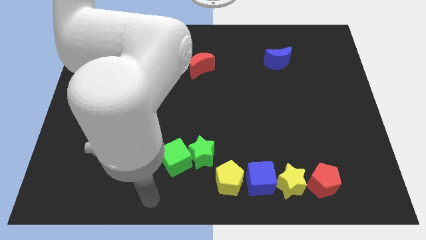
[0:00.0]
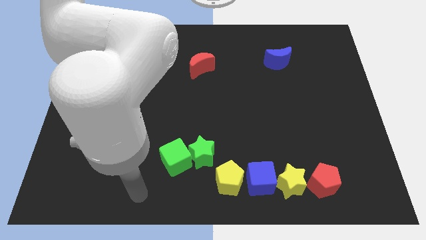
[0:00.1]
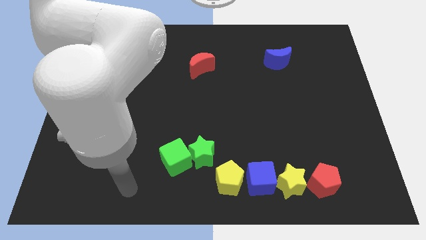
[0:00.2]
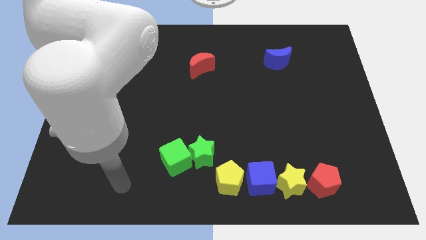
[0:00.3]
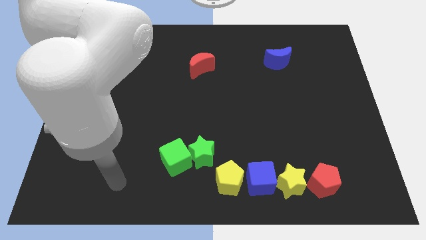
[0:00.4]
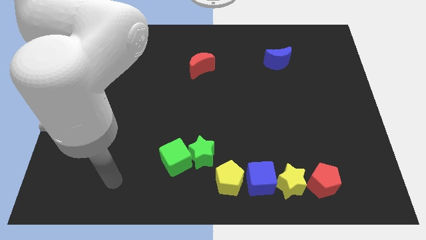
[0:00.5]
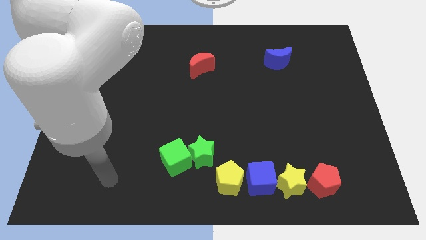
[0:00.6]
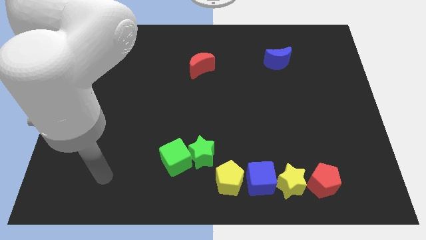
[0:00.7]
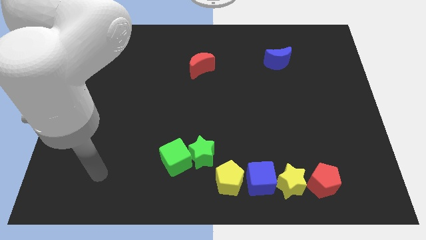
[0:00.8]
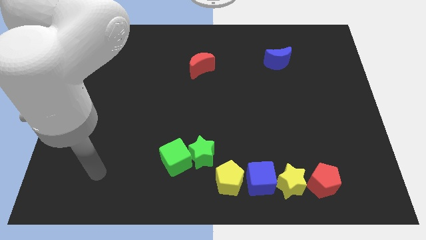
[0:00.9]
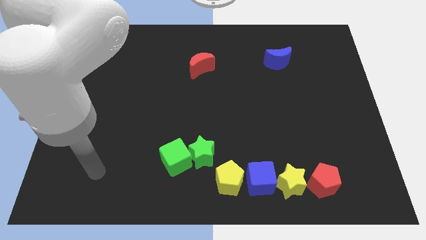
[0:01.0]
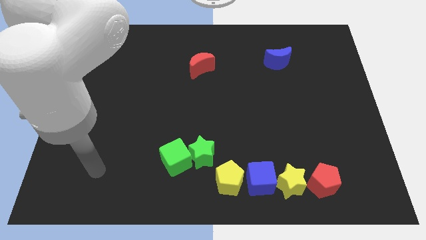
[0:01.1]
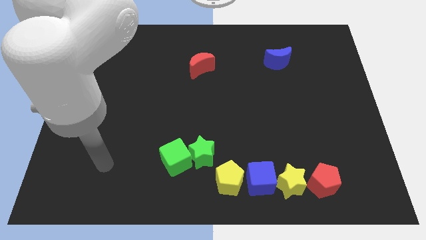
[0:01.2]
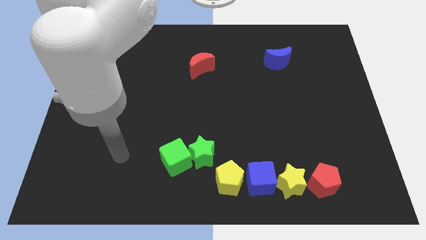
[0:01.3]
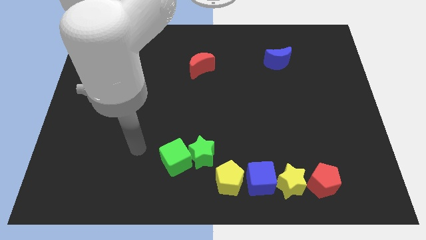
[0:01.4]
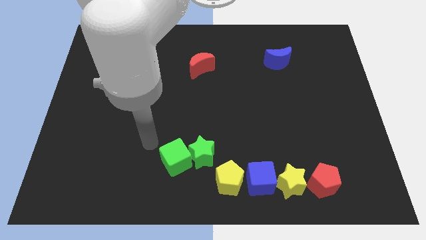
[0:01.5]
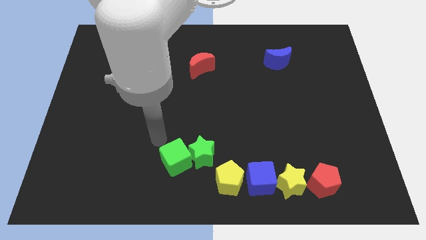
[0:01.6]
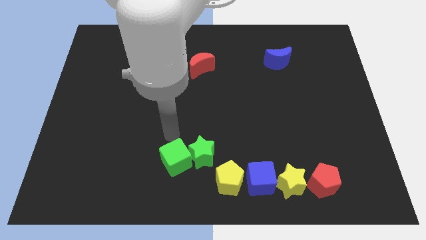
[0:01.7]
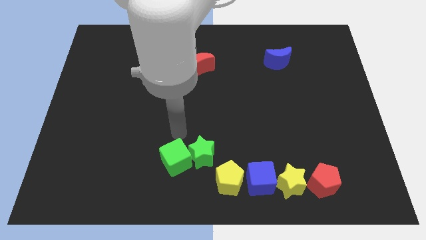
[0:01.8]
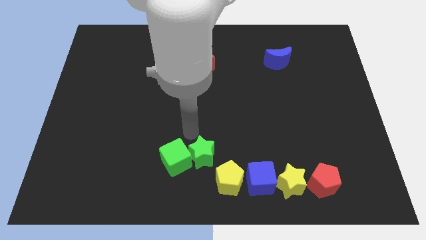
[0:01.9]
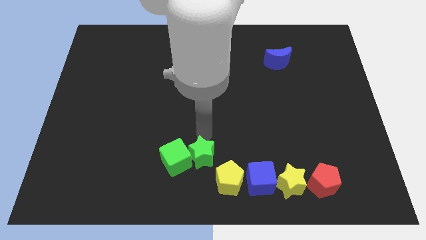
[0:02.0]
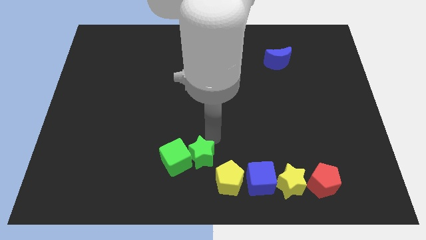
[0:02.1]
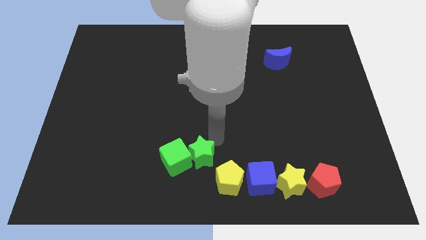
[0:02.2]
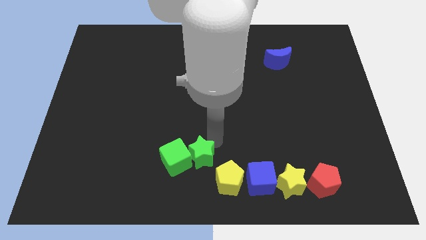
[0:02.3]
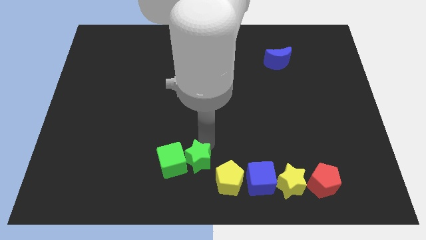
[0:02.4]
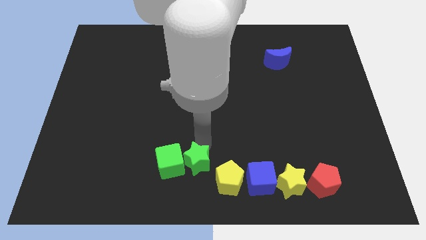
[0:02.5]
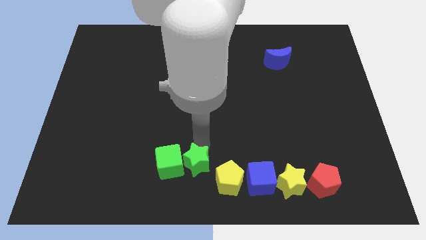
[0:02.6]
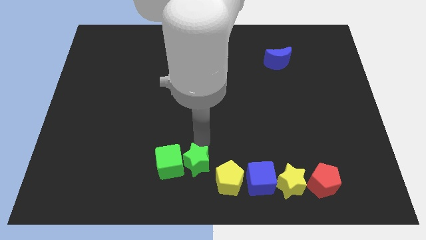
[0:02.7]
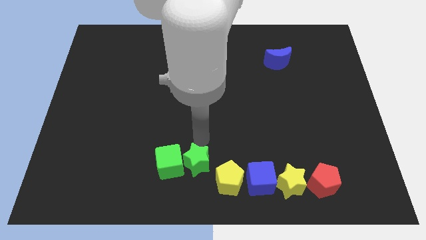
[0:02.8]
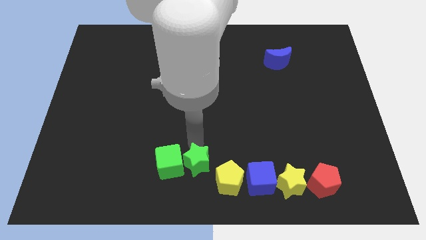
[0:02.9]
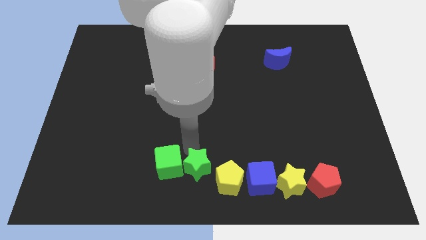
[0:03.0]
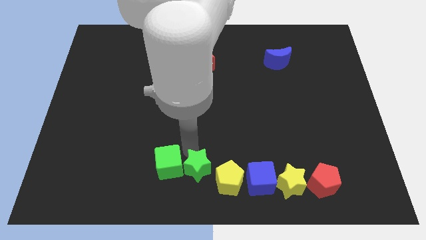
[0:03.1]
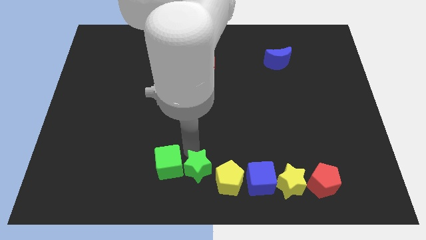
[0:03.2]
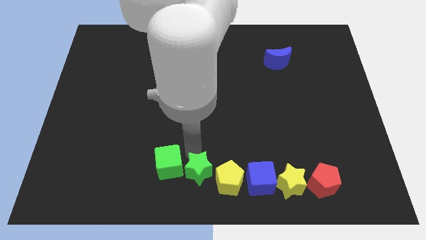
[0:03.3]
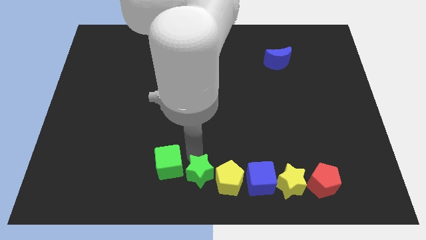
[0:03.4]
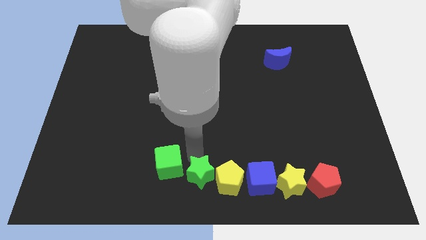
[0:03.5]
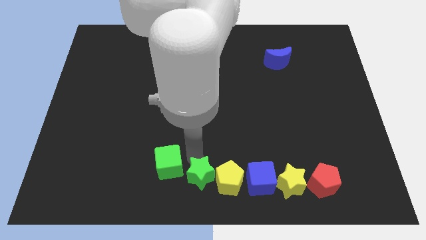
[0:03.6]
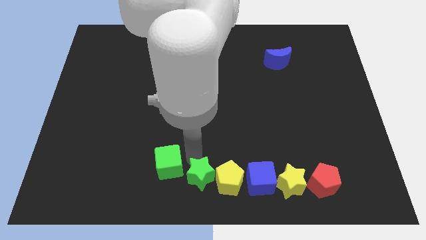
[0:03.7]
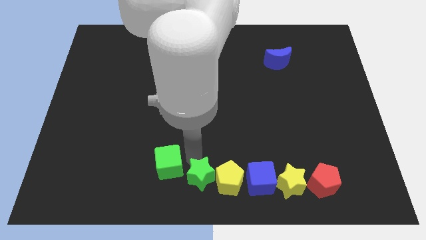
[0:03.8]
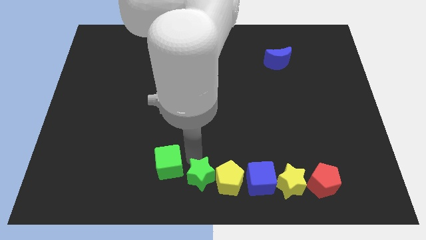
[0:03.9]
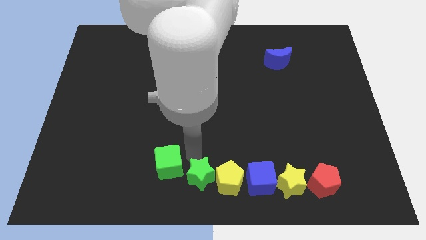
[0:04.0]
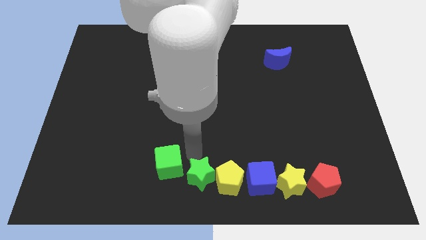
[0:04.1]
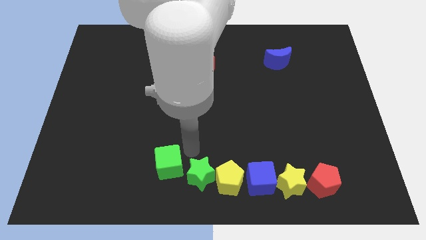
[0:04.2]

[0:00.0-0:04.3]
place the green star left to the yellow pentagon

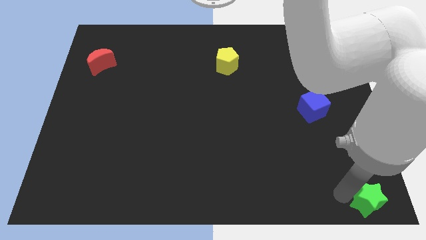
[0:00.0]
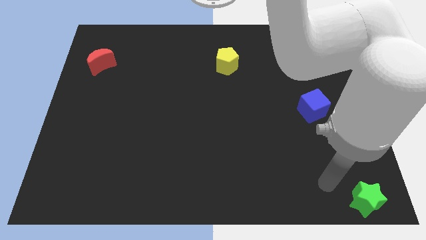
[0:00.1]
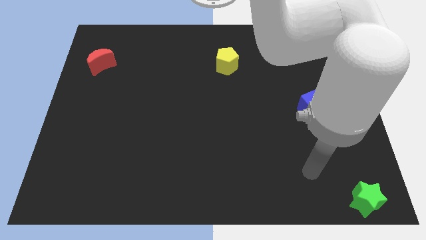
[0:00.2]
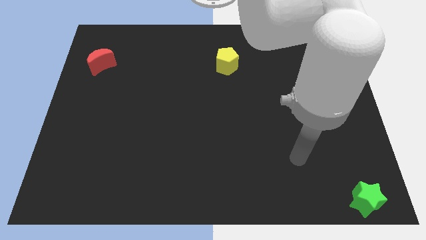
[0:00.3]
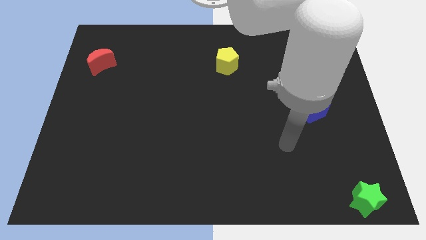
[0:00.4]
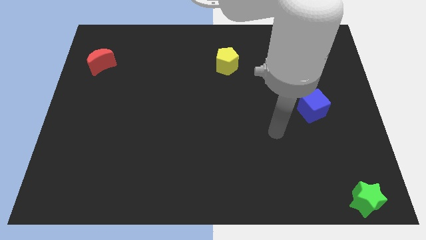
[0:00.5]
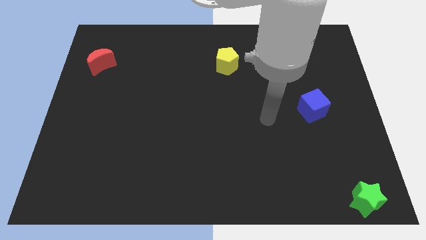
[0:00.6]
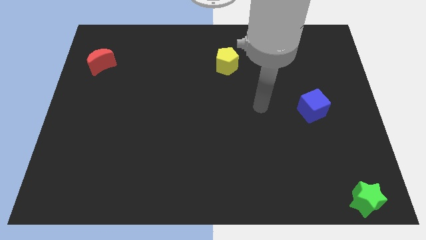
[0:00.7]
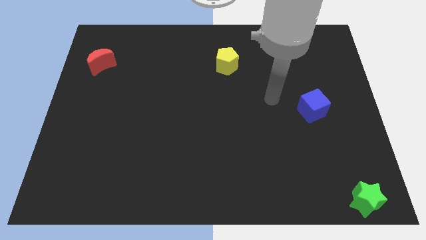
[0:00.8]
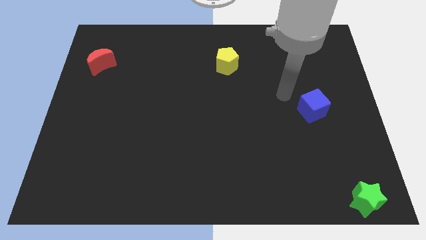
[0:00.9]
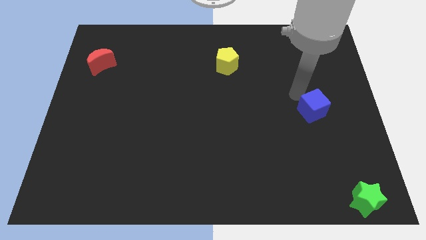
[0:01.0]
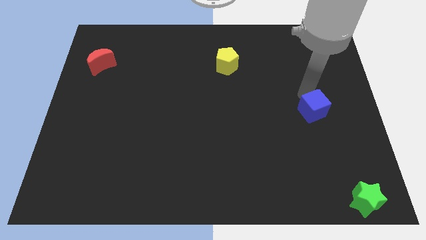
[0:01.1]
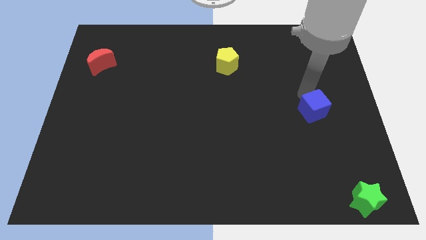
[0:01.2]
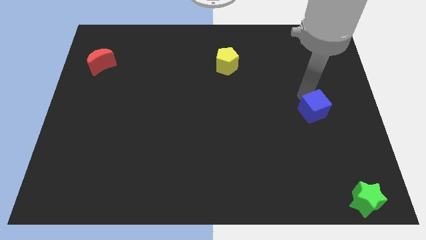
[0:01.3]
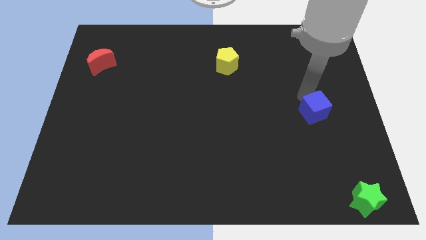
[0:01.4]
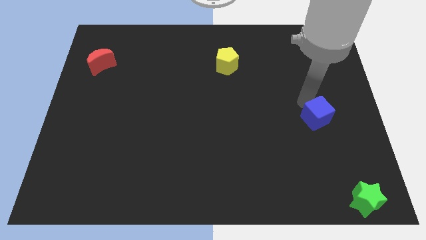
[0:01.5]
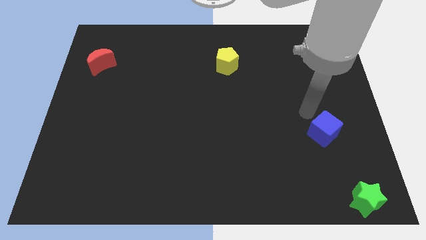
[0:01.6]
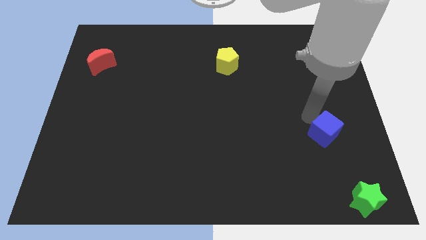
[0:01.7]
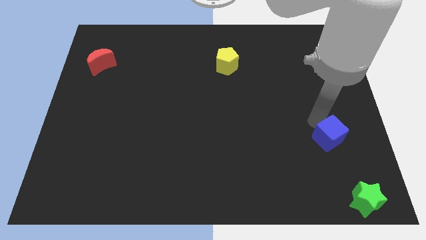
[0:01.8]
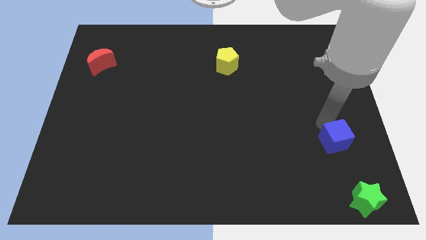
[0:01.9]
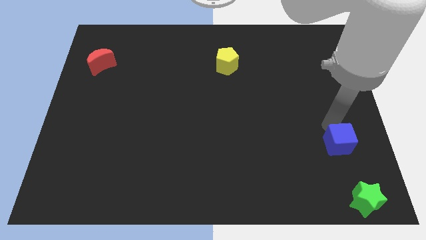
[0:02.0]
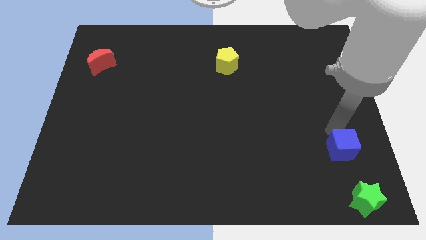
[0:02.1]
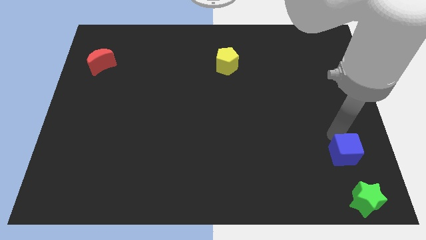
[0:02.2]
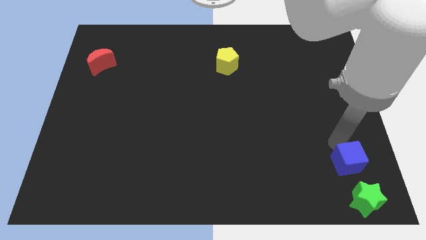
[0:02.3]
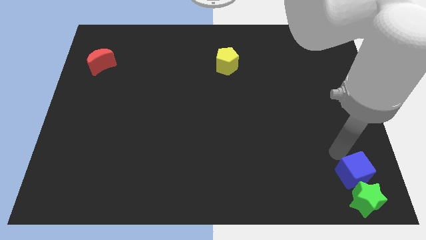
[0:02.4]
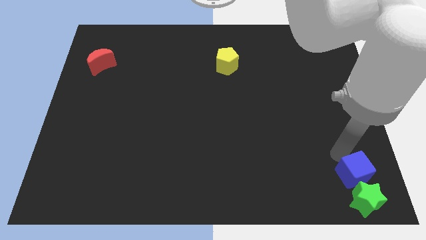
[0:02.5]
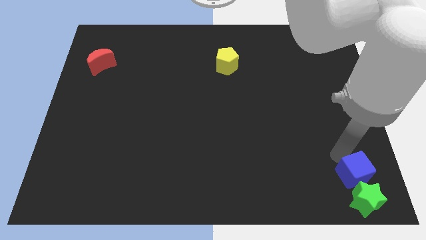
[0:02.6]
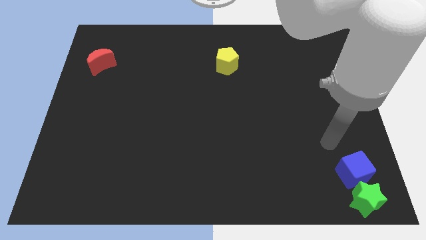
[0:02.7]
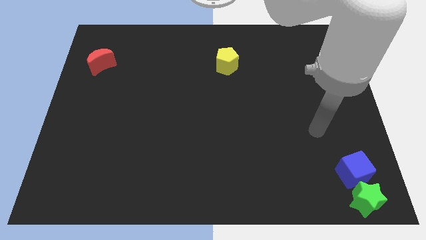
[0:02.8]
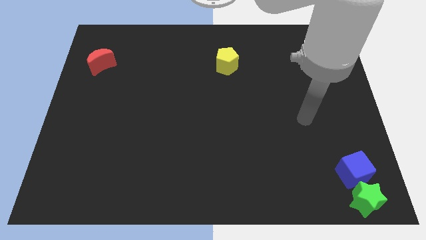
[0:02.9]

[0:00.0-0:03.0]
place blue cube to the top of green star

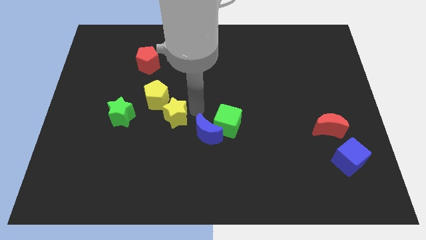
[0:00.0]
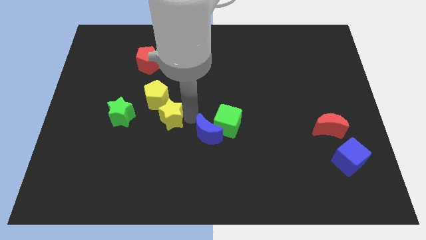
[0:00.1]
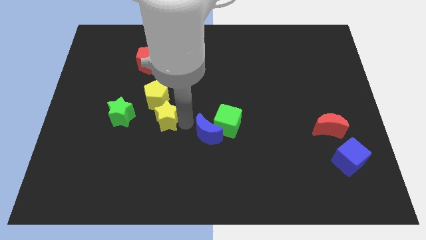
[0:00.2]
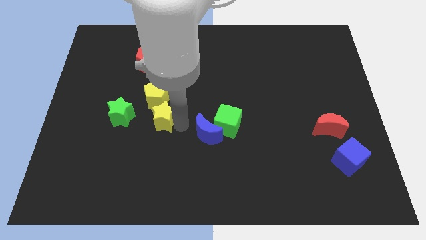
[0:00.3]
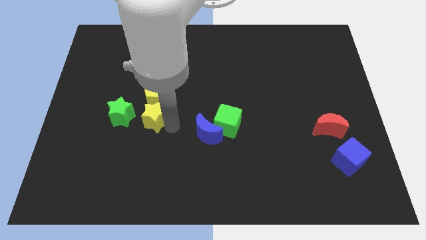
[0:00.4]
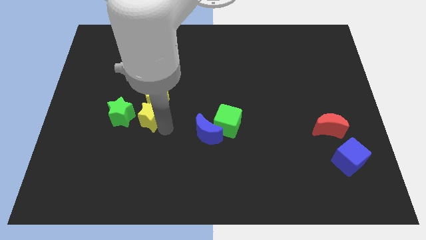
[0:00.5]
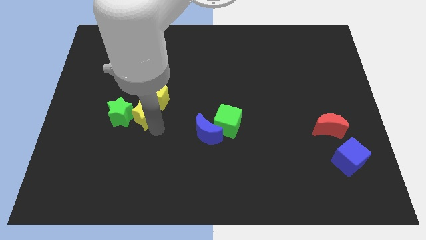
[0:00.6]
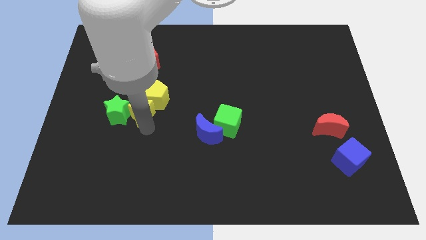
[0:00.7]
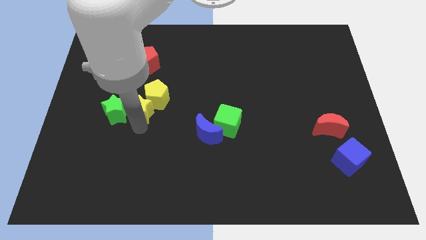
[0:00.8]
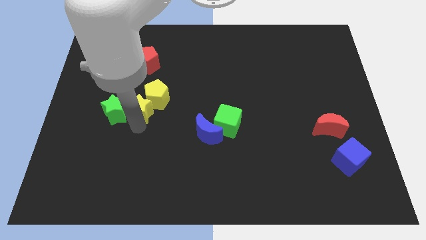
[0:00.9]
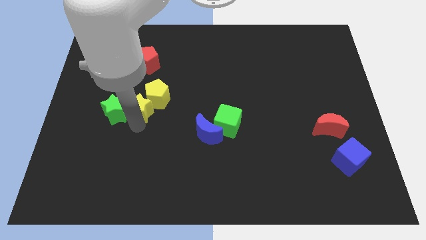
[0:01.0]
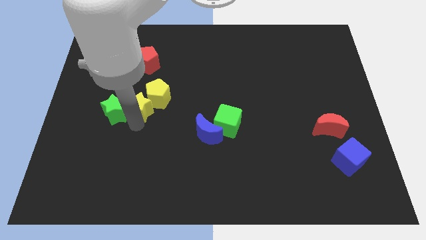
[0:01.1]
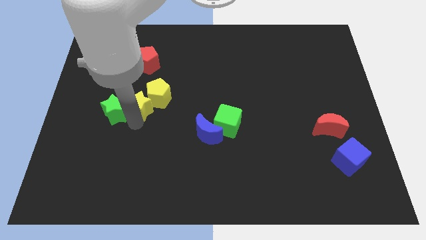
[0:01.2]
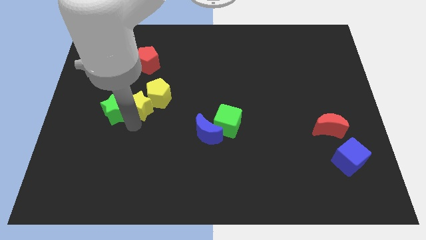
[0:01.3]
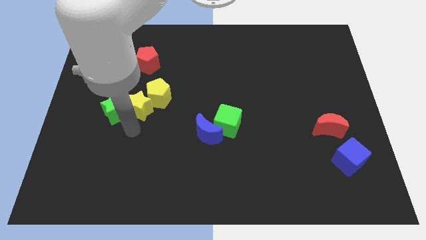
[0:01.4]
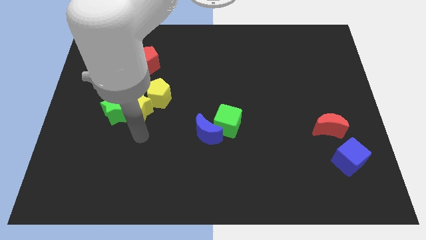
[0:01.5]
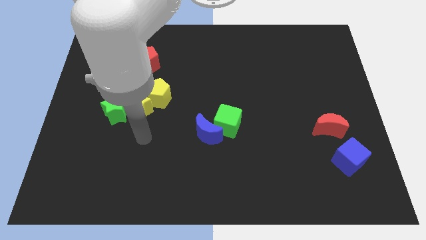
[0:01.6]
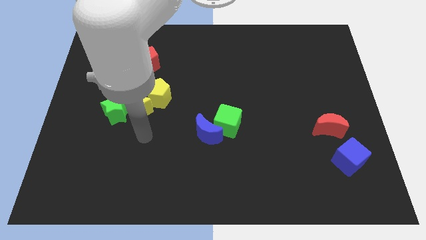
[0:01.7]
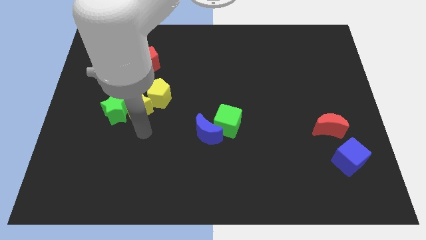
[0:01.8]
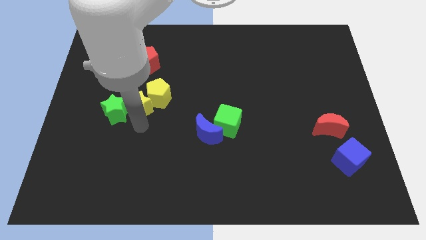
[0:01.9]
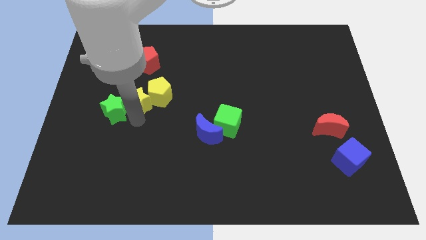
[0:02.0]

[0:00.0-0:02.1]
place the yellow star in between green star and yellow pentagon
